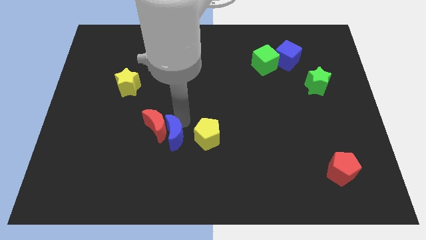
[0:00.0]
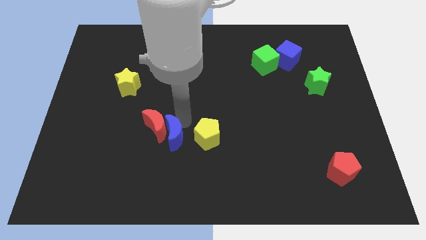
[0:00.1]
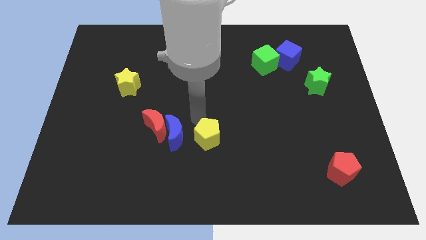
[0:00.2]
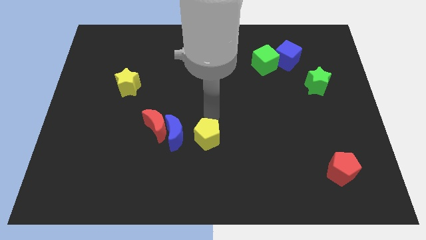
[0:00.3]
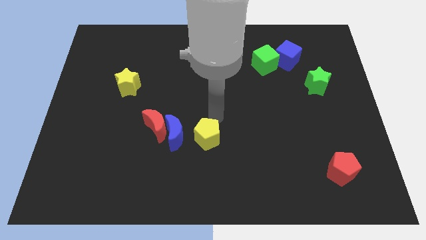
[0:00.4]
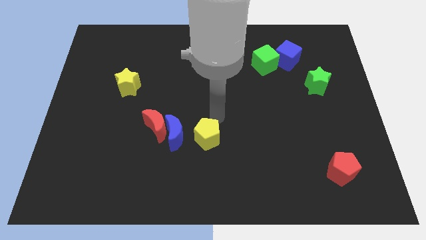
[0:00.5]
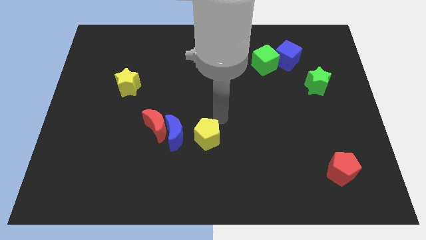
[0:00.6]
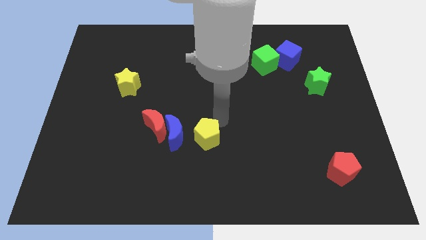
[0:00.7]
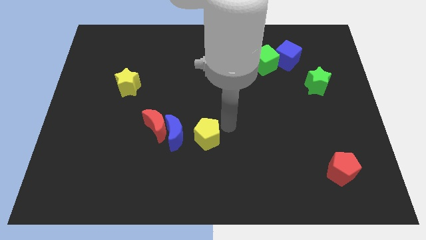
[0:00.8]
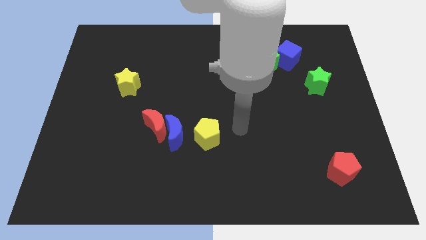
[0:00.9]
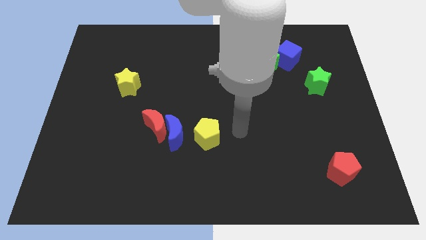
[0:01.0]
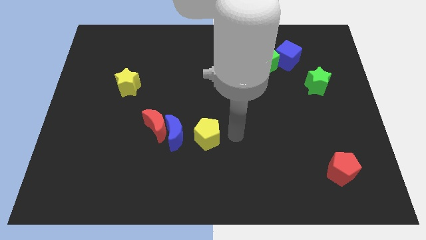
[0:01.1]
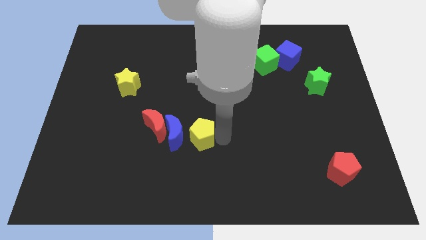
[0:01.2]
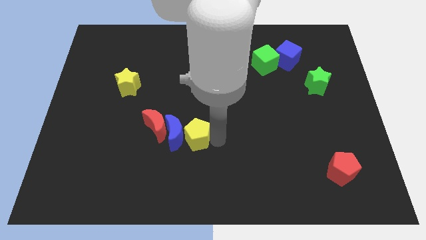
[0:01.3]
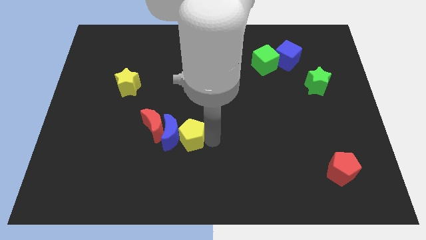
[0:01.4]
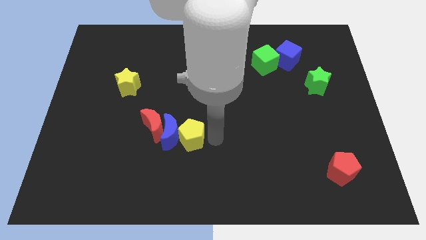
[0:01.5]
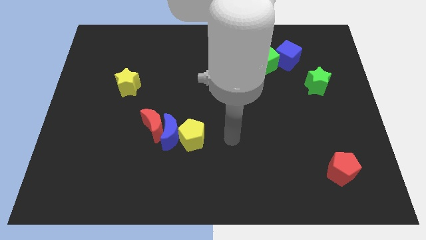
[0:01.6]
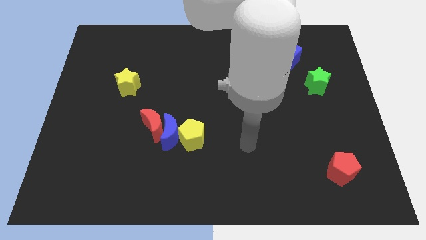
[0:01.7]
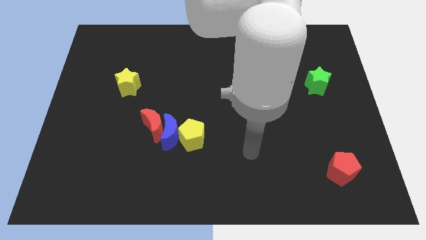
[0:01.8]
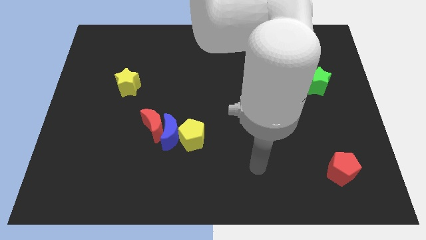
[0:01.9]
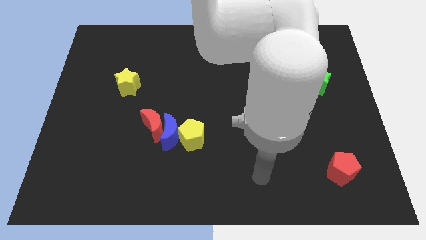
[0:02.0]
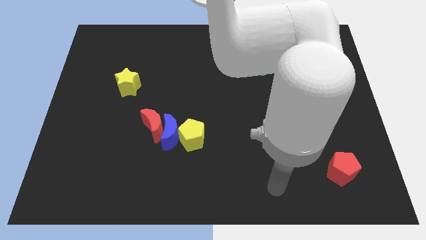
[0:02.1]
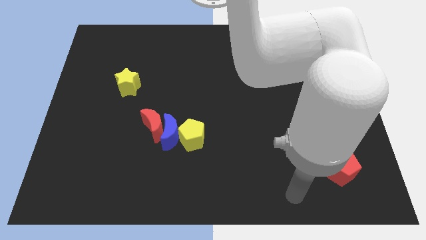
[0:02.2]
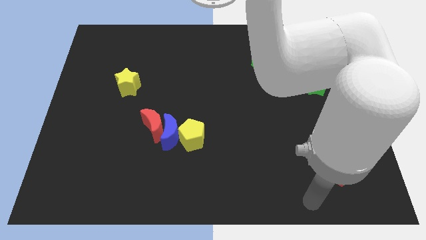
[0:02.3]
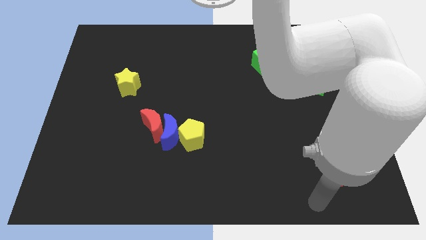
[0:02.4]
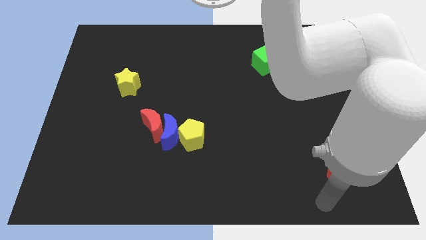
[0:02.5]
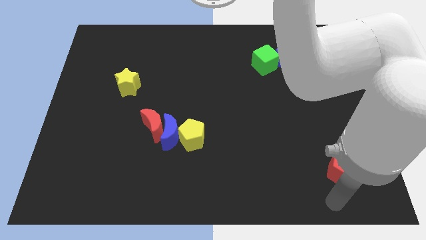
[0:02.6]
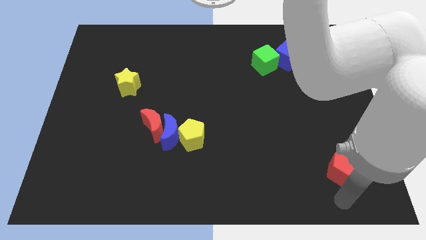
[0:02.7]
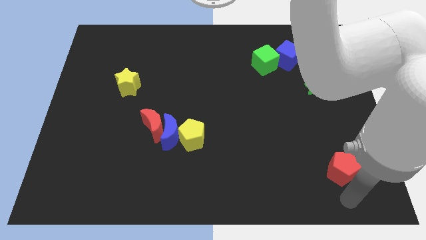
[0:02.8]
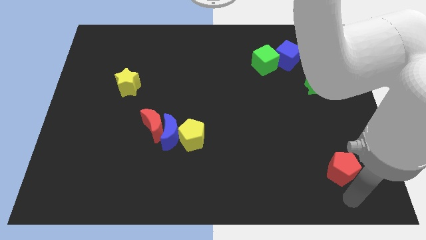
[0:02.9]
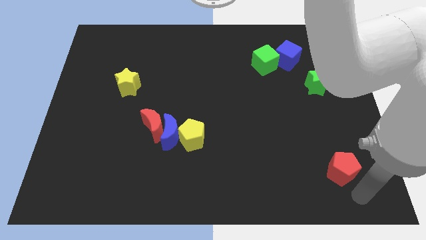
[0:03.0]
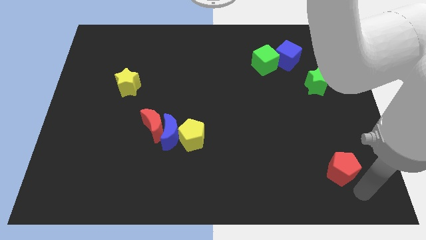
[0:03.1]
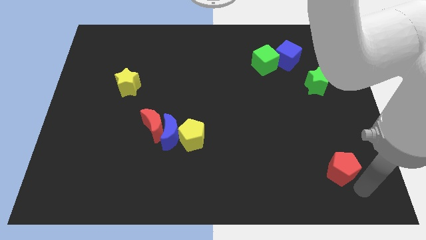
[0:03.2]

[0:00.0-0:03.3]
push the yellow pentagon into the blue moon and red moon

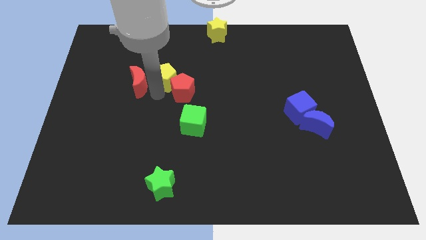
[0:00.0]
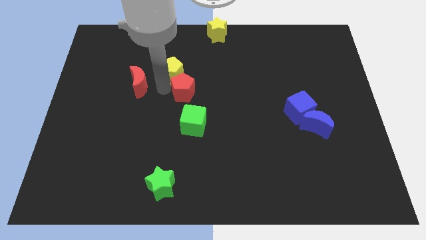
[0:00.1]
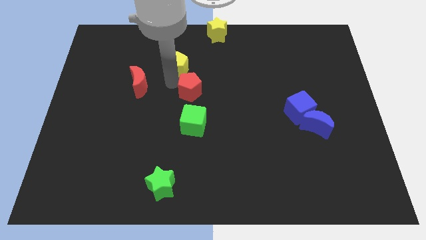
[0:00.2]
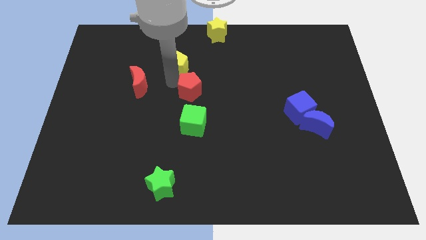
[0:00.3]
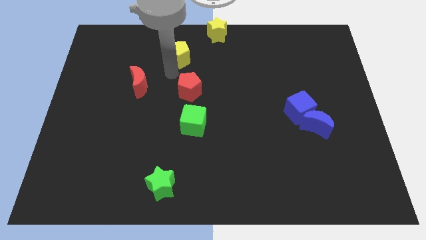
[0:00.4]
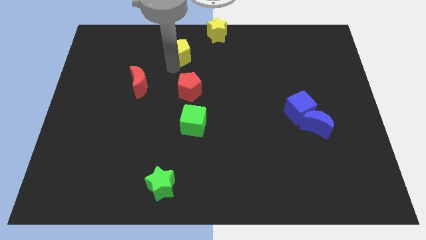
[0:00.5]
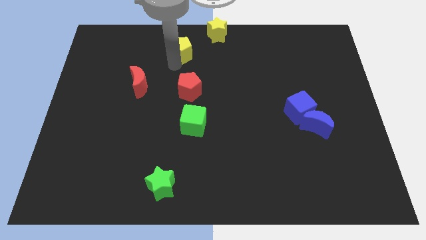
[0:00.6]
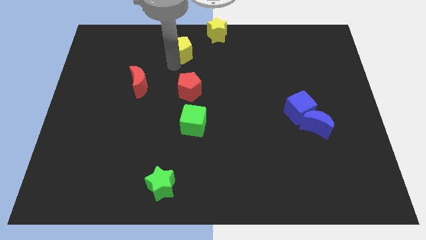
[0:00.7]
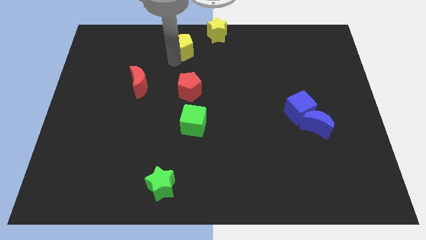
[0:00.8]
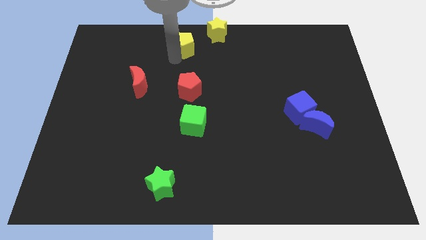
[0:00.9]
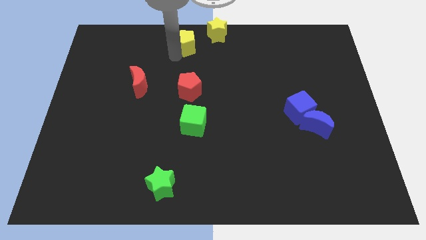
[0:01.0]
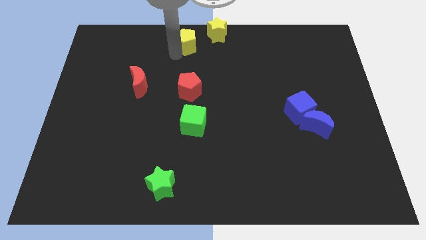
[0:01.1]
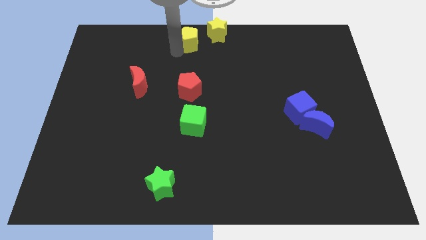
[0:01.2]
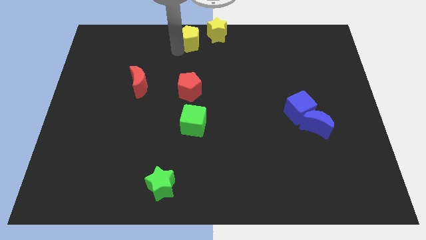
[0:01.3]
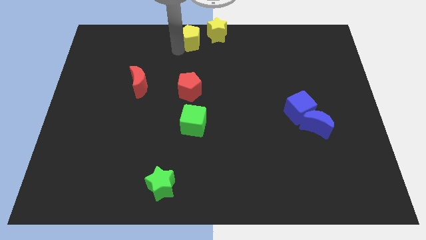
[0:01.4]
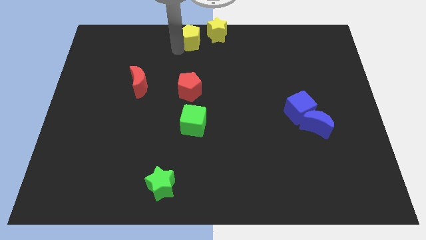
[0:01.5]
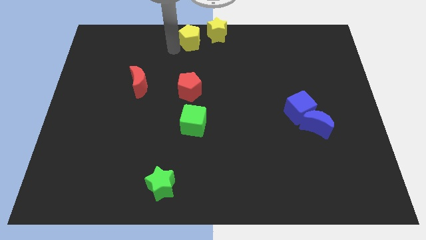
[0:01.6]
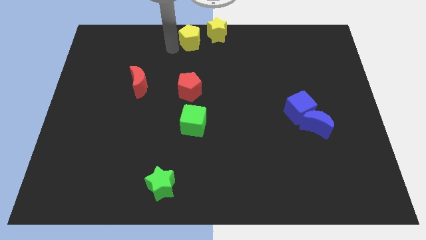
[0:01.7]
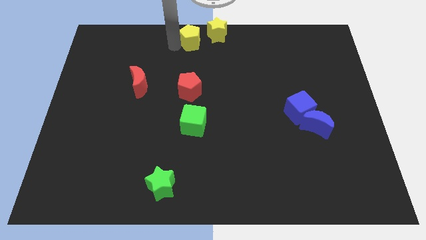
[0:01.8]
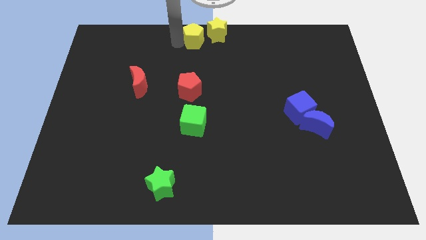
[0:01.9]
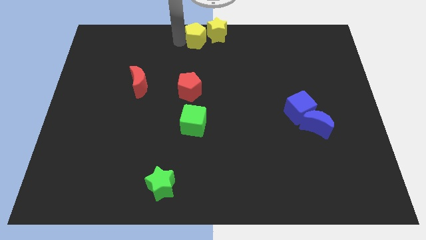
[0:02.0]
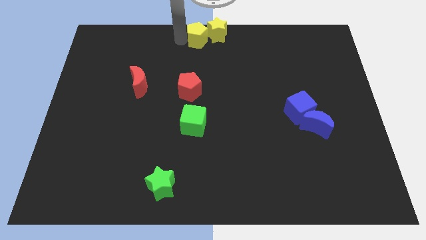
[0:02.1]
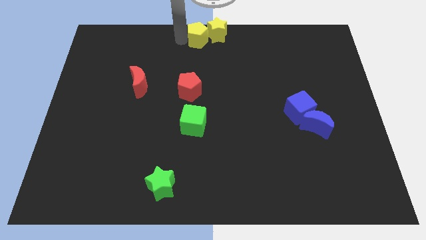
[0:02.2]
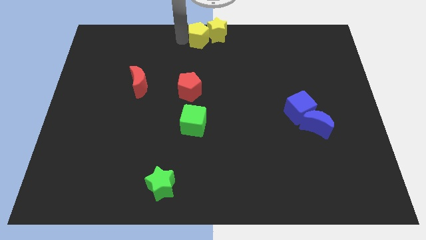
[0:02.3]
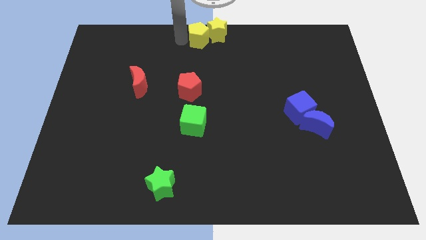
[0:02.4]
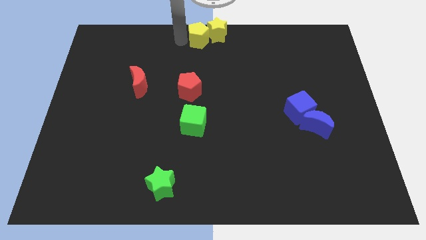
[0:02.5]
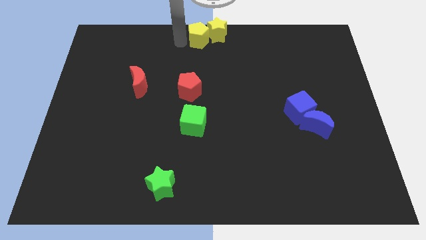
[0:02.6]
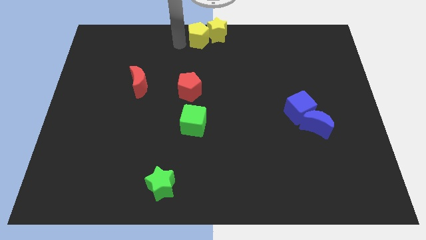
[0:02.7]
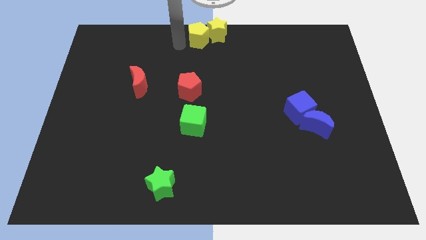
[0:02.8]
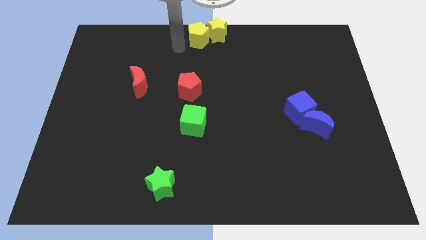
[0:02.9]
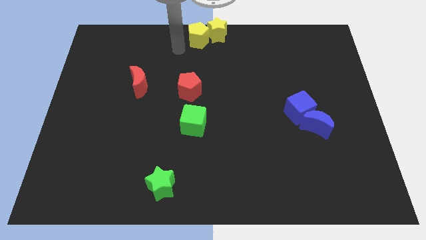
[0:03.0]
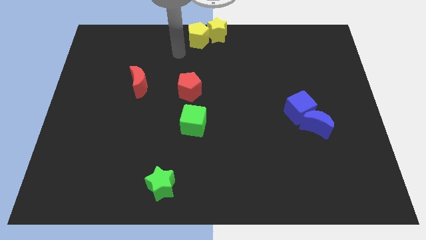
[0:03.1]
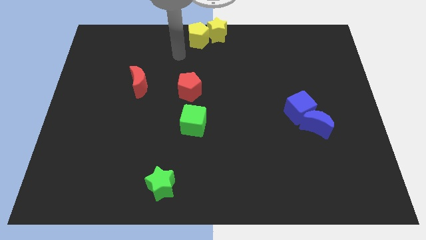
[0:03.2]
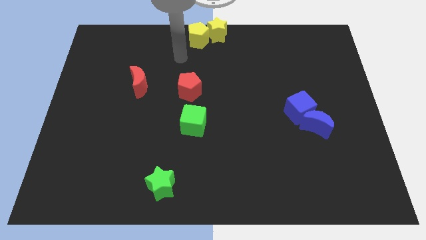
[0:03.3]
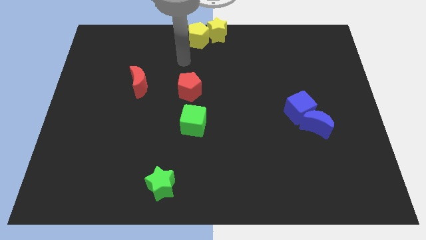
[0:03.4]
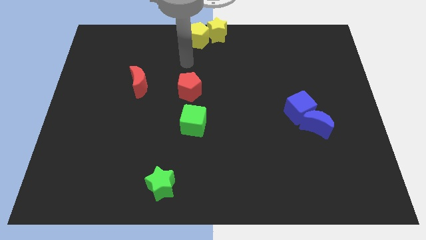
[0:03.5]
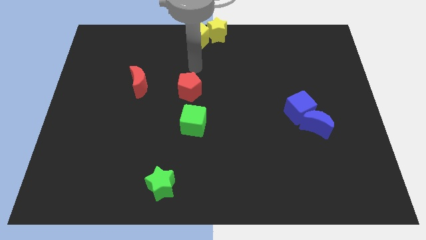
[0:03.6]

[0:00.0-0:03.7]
move the yellow pentagon left to the yellow star

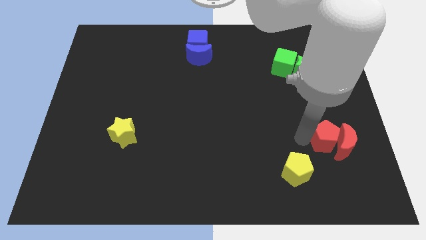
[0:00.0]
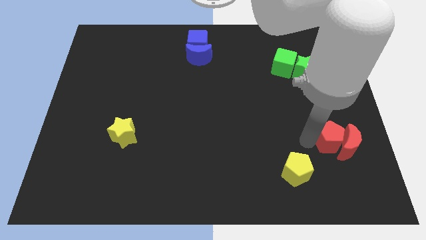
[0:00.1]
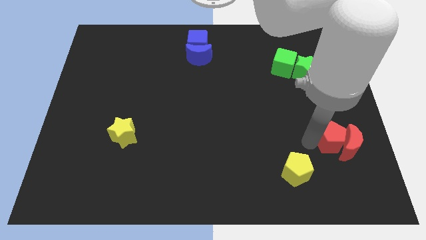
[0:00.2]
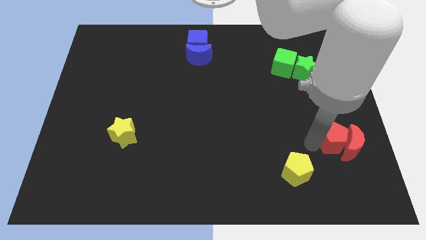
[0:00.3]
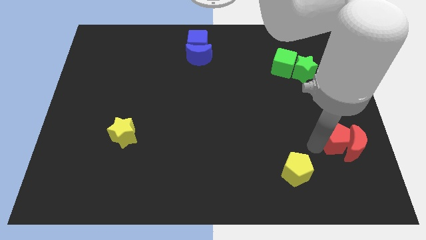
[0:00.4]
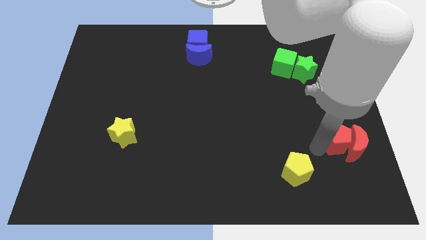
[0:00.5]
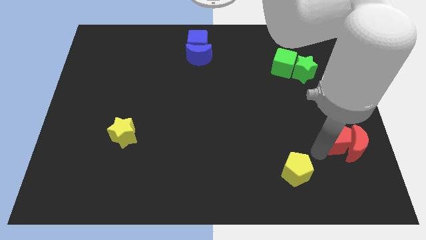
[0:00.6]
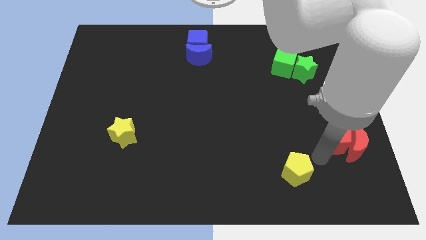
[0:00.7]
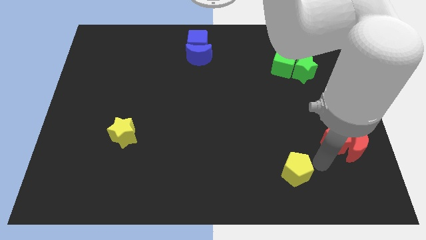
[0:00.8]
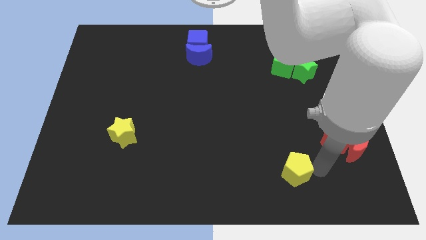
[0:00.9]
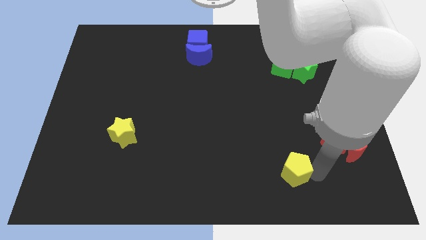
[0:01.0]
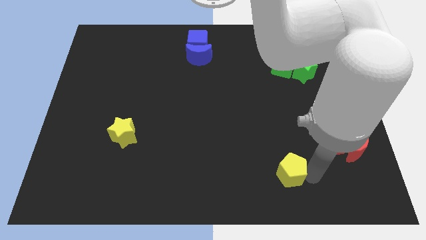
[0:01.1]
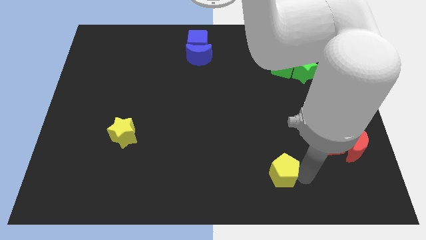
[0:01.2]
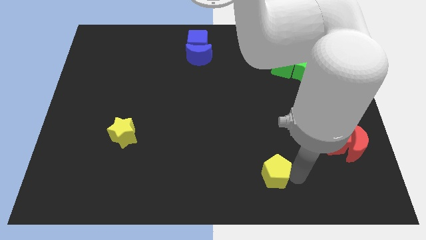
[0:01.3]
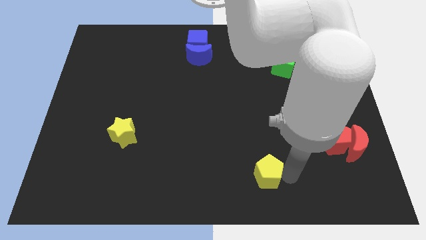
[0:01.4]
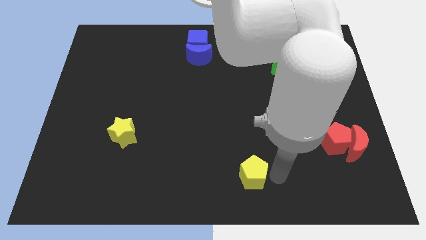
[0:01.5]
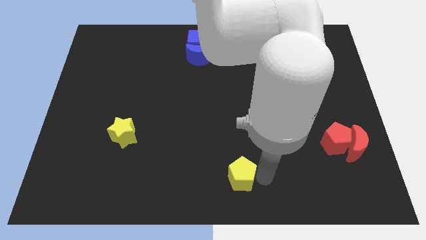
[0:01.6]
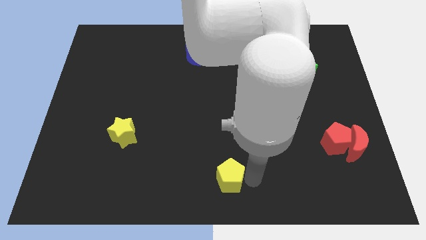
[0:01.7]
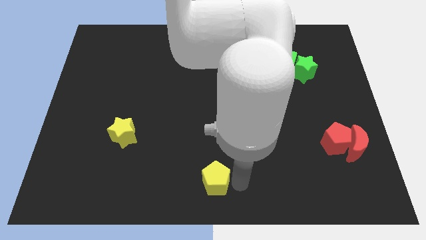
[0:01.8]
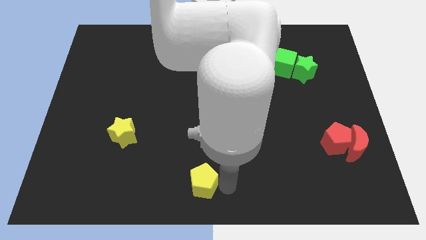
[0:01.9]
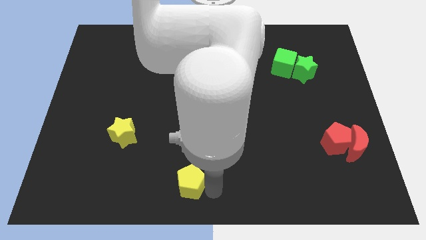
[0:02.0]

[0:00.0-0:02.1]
place the yellow pentagon diagonally to the yellow star
